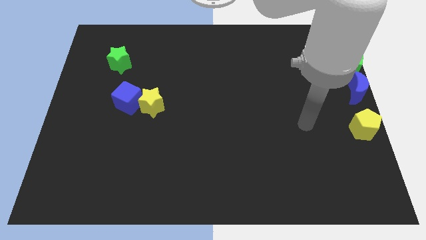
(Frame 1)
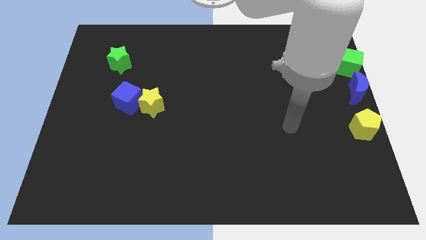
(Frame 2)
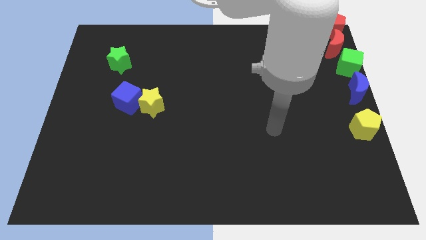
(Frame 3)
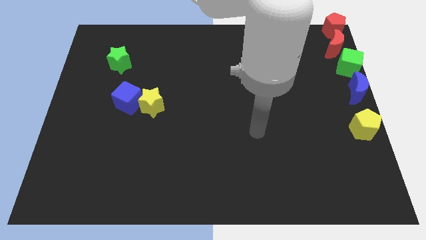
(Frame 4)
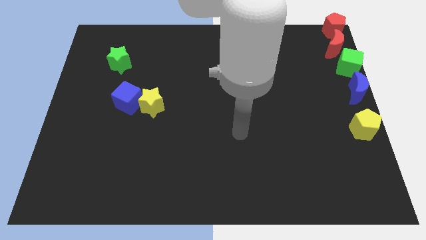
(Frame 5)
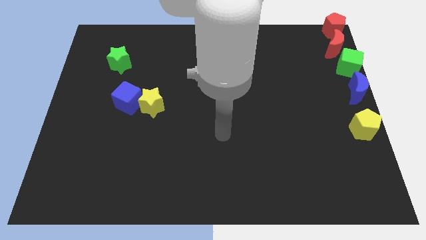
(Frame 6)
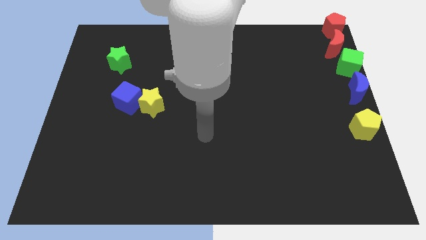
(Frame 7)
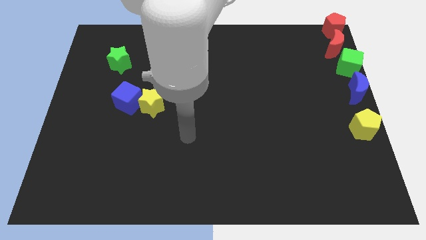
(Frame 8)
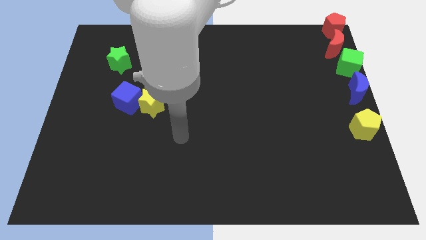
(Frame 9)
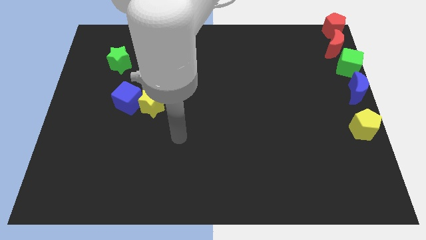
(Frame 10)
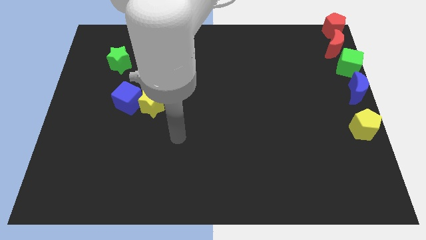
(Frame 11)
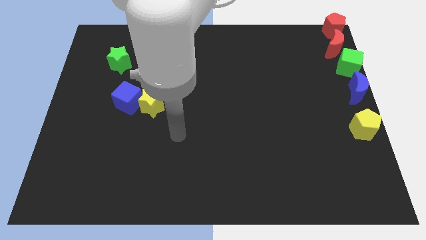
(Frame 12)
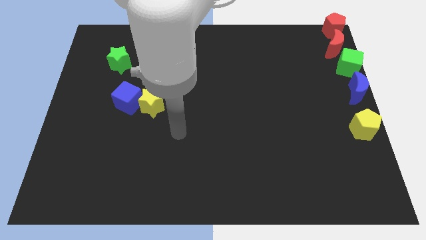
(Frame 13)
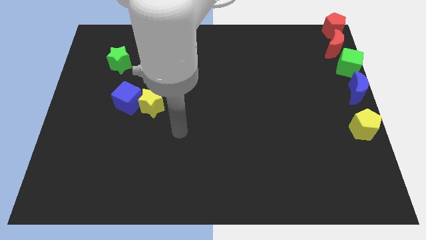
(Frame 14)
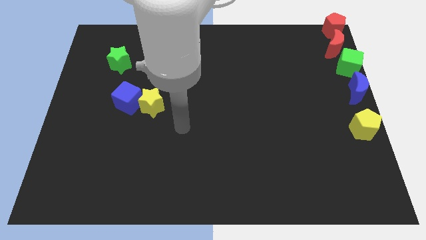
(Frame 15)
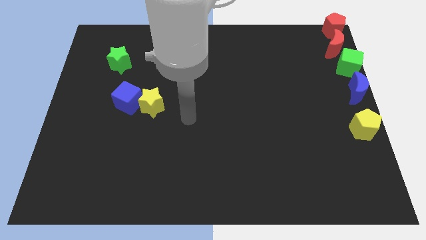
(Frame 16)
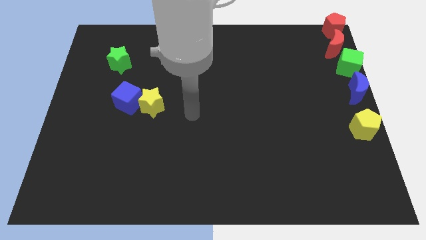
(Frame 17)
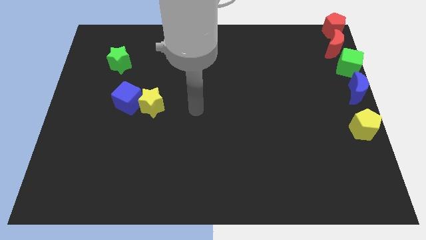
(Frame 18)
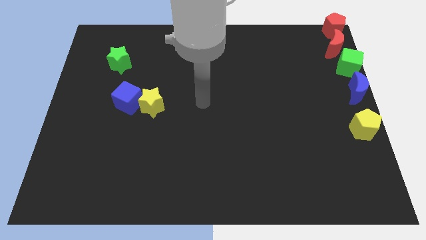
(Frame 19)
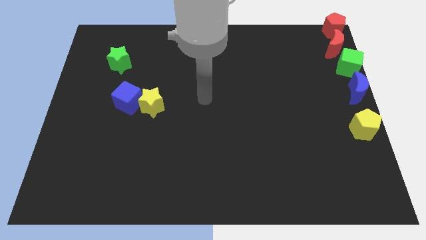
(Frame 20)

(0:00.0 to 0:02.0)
move the arm right to the yellow star

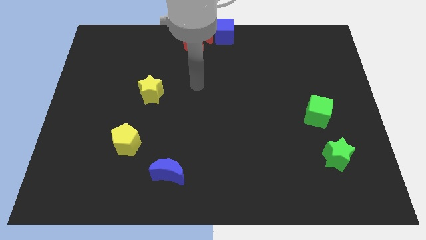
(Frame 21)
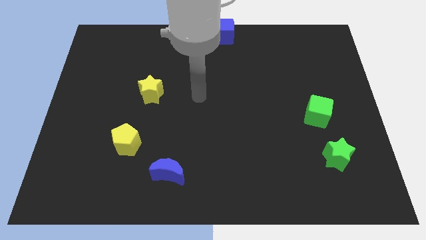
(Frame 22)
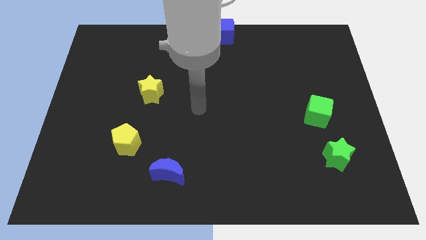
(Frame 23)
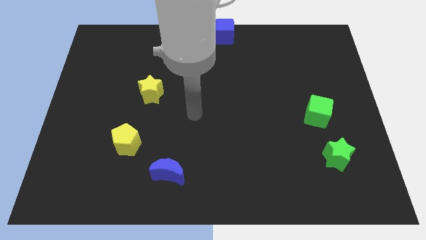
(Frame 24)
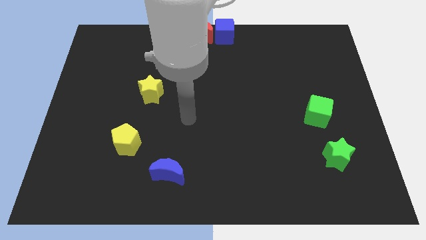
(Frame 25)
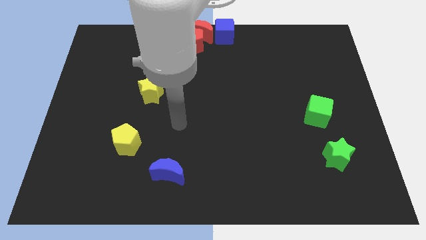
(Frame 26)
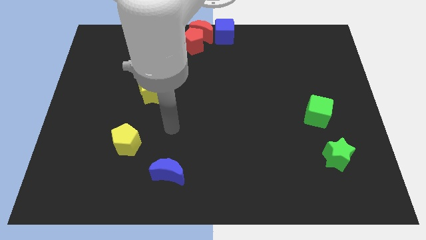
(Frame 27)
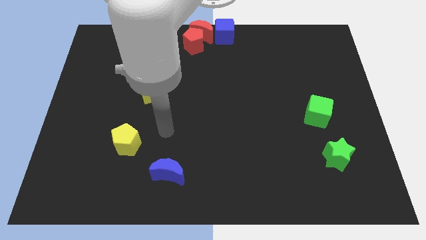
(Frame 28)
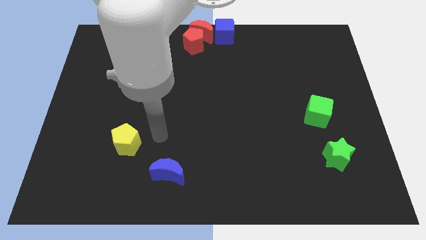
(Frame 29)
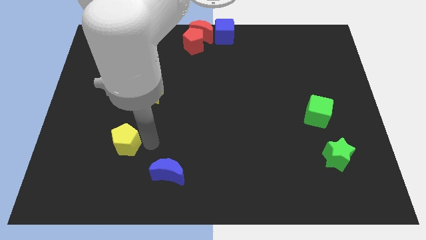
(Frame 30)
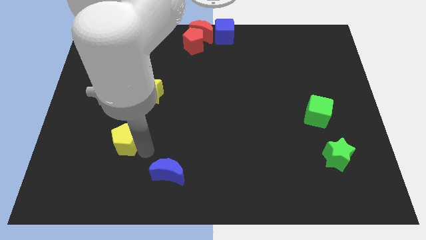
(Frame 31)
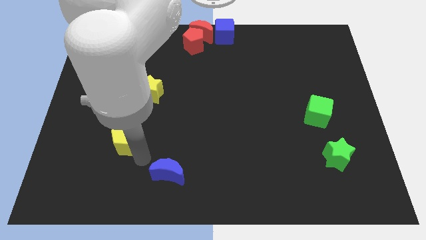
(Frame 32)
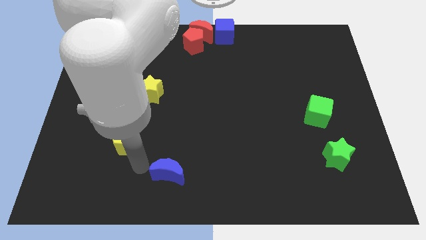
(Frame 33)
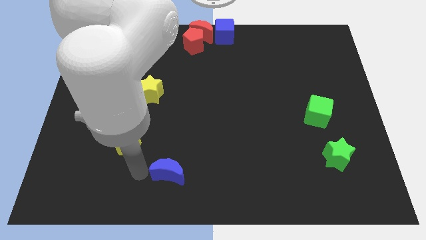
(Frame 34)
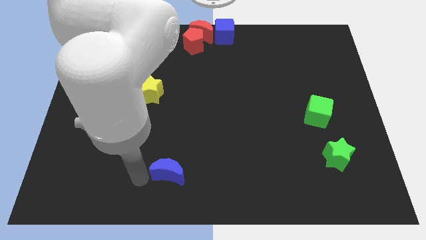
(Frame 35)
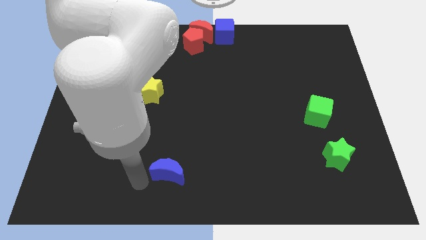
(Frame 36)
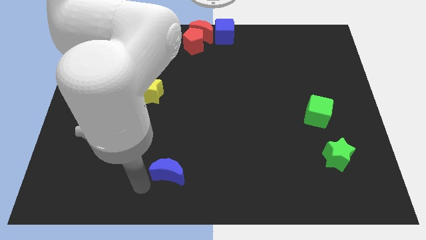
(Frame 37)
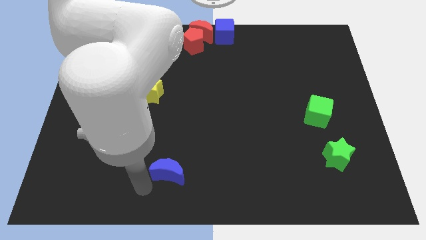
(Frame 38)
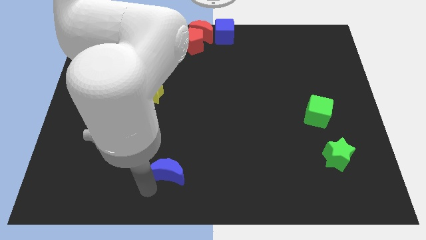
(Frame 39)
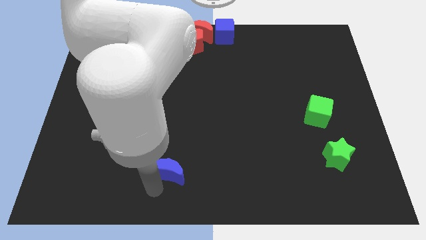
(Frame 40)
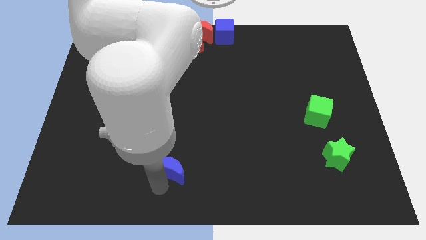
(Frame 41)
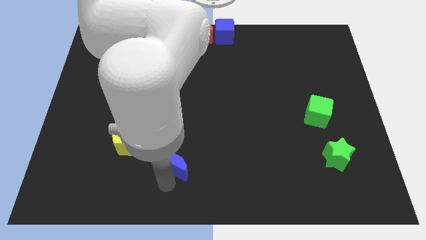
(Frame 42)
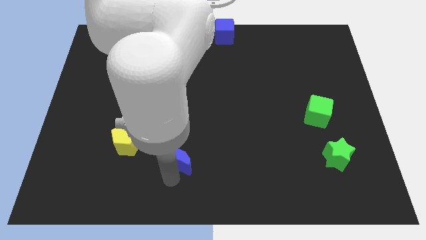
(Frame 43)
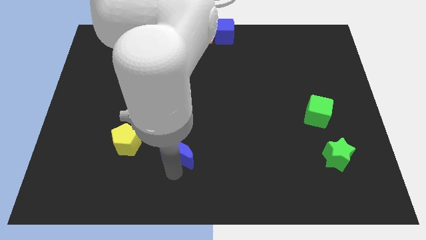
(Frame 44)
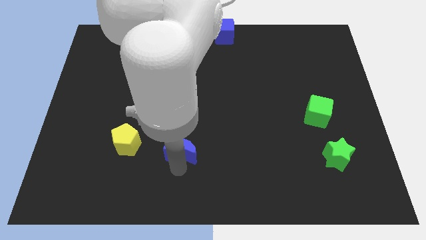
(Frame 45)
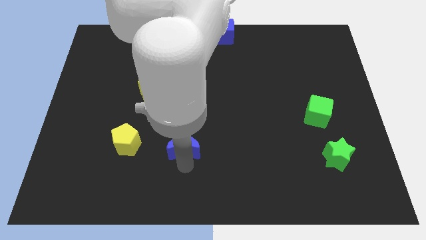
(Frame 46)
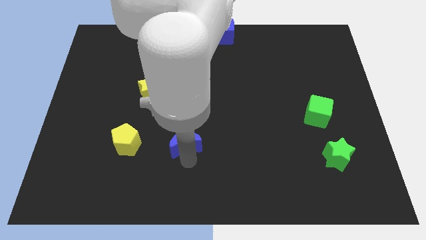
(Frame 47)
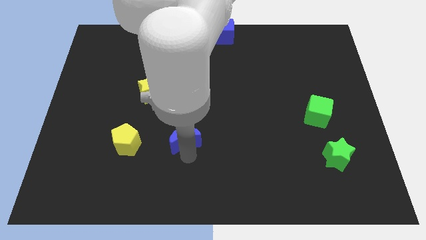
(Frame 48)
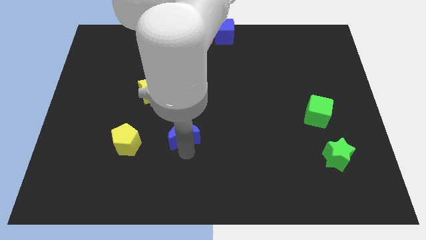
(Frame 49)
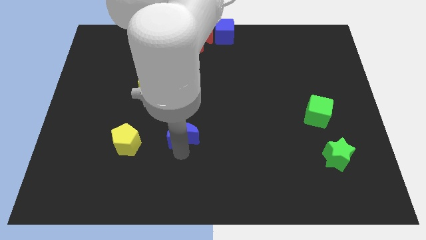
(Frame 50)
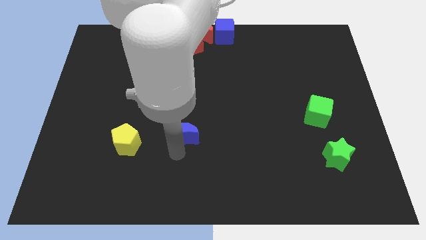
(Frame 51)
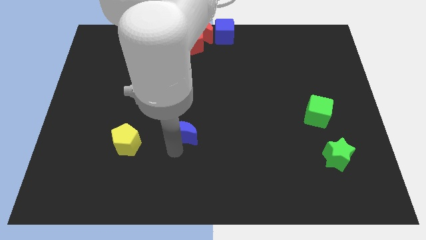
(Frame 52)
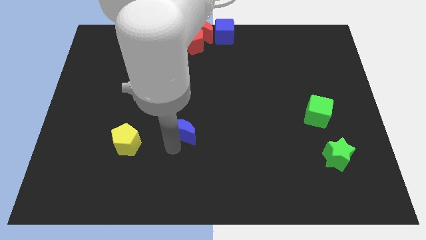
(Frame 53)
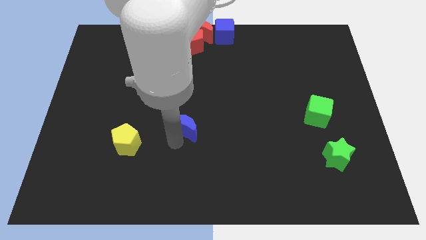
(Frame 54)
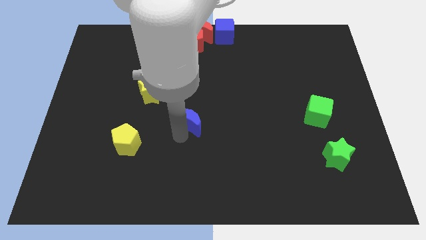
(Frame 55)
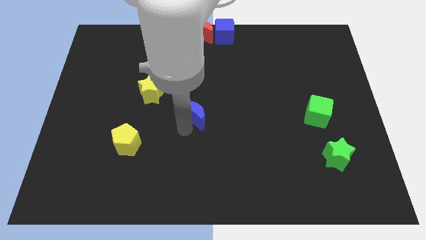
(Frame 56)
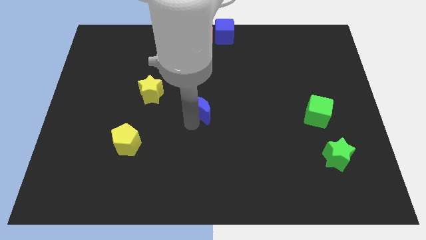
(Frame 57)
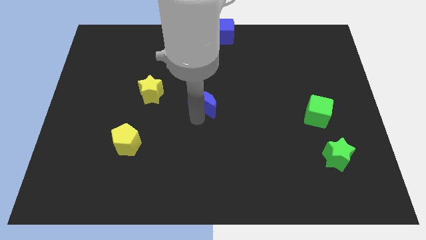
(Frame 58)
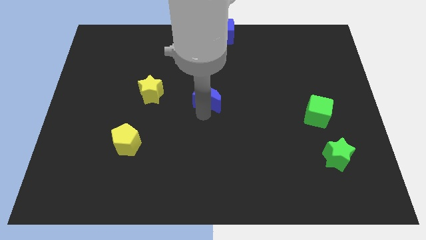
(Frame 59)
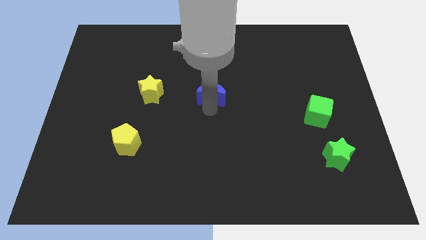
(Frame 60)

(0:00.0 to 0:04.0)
place the blue crescent at center of the board

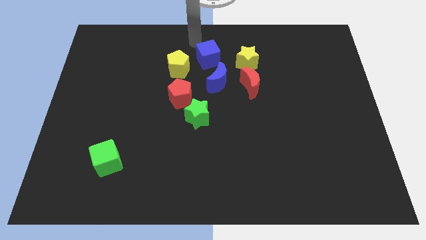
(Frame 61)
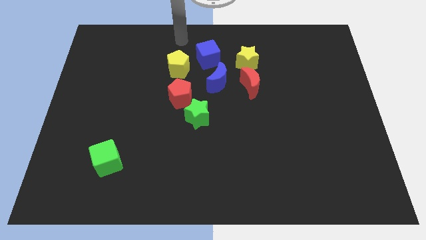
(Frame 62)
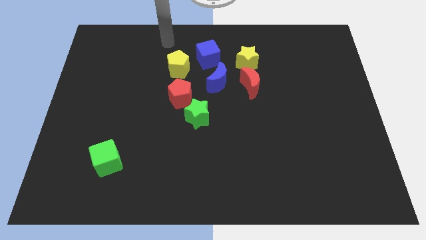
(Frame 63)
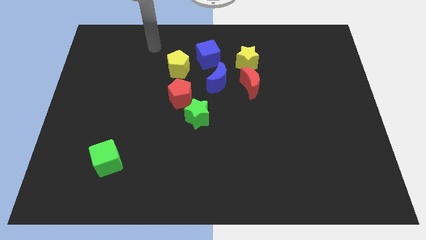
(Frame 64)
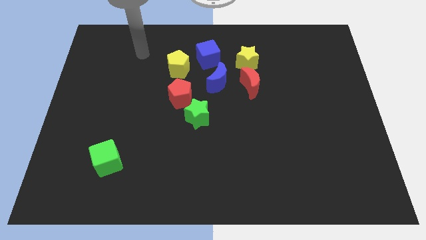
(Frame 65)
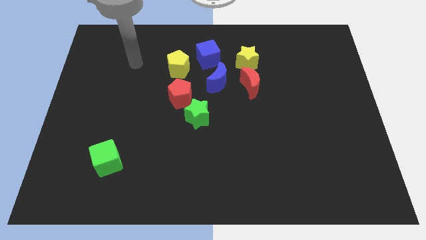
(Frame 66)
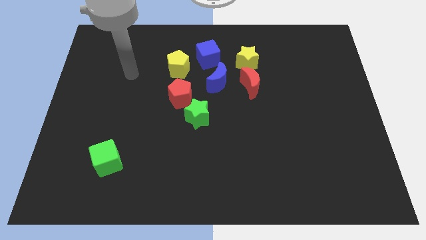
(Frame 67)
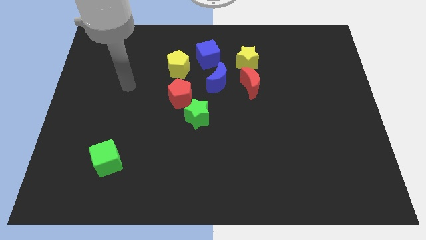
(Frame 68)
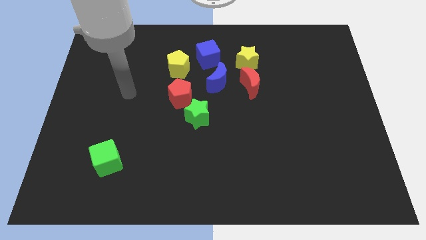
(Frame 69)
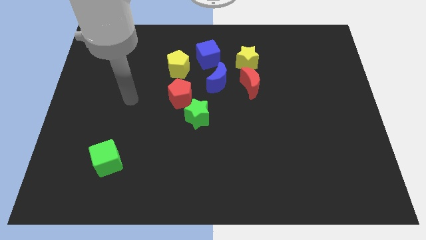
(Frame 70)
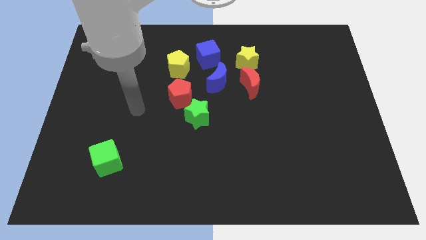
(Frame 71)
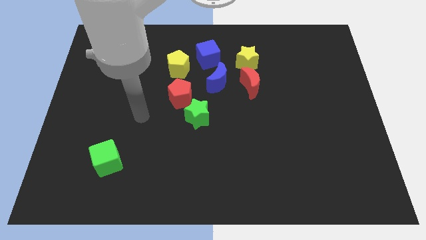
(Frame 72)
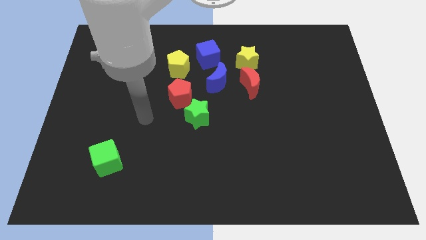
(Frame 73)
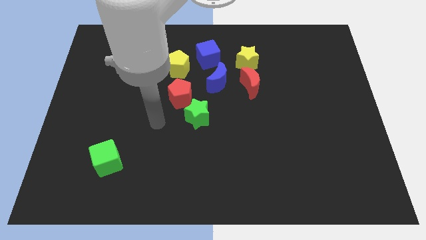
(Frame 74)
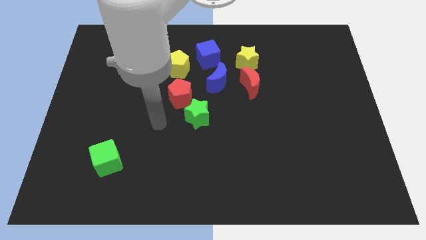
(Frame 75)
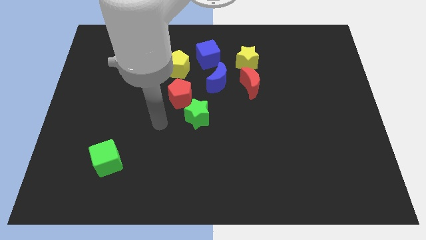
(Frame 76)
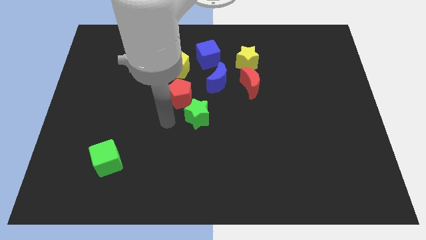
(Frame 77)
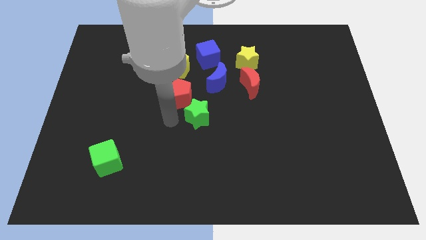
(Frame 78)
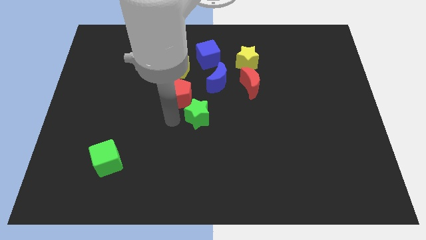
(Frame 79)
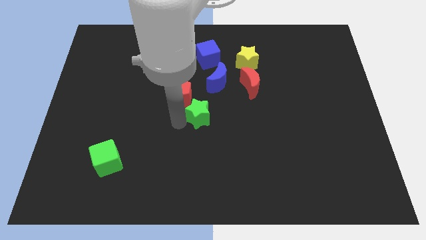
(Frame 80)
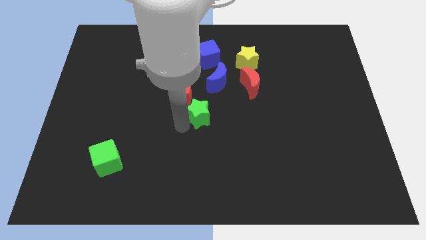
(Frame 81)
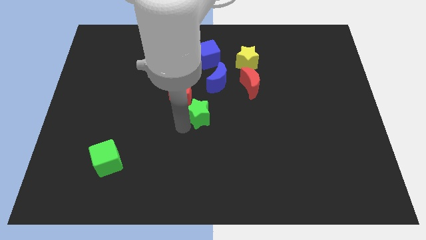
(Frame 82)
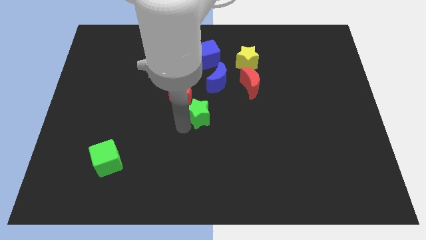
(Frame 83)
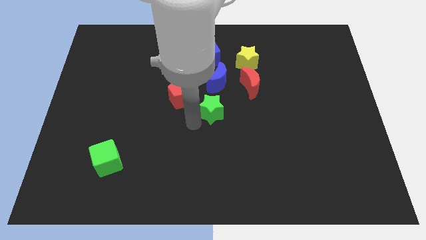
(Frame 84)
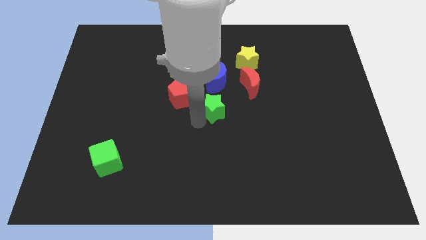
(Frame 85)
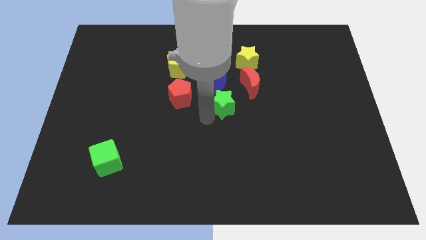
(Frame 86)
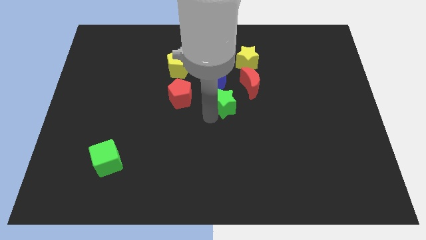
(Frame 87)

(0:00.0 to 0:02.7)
place green star to the bottom of blue moon

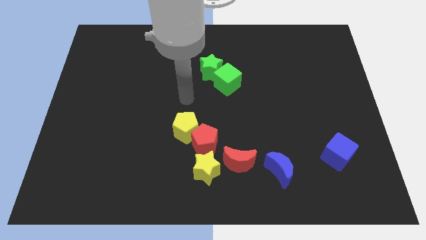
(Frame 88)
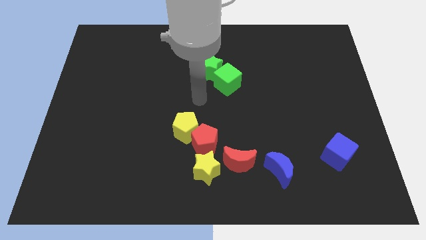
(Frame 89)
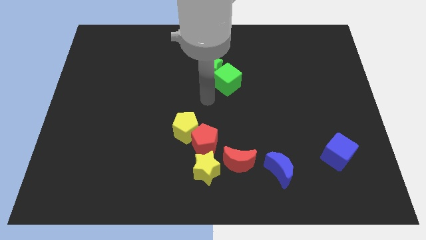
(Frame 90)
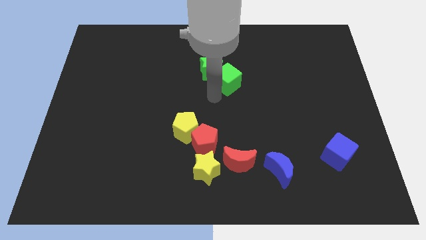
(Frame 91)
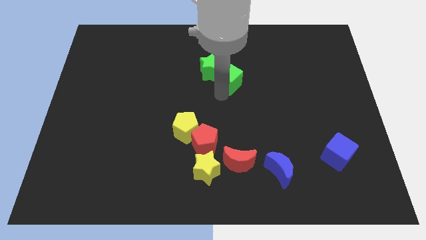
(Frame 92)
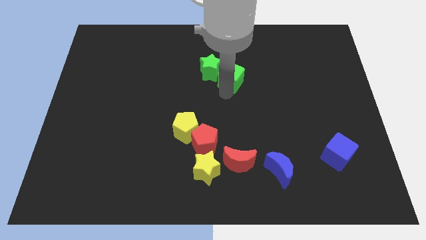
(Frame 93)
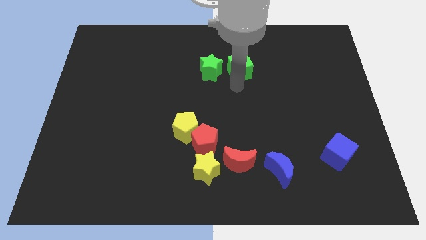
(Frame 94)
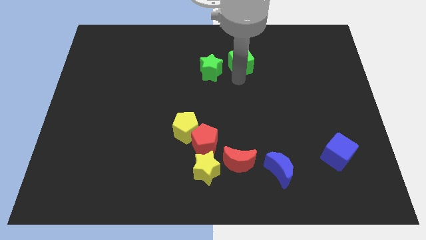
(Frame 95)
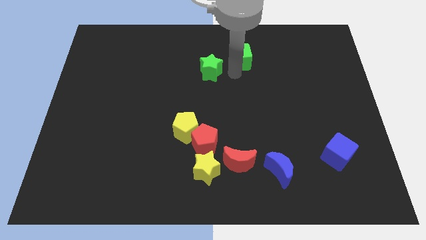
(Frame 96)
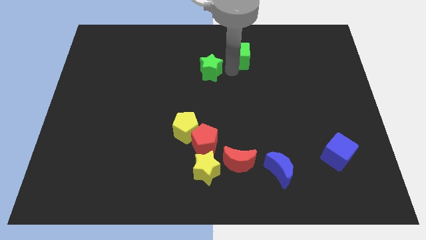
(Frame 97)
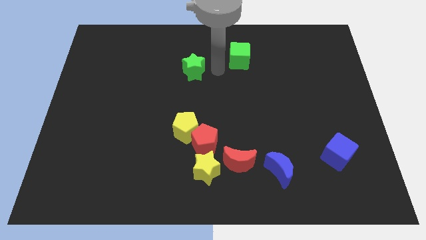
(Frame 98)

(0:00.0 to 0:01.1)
move the green cube slightly to the center of the board
